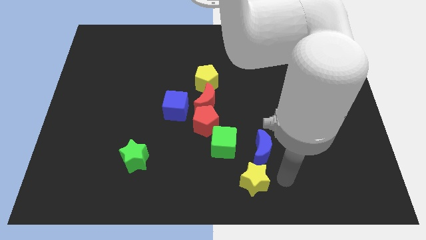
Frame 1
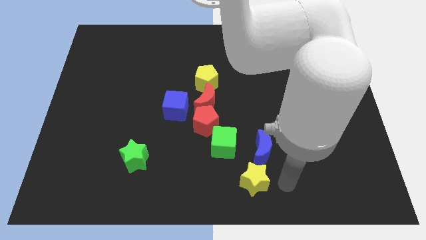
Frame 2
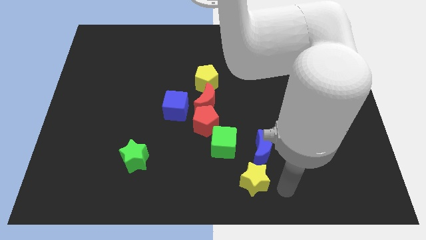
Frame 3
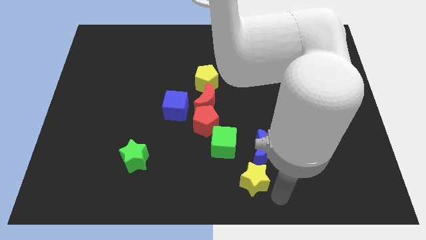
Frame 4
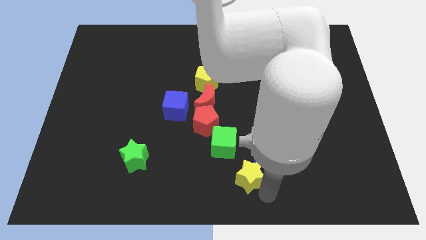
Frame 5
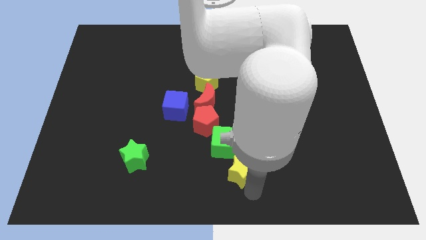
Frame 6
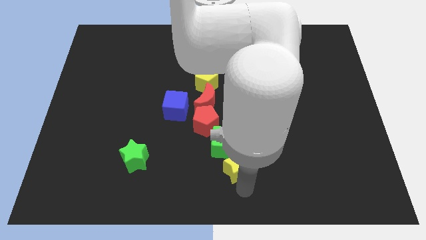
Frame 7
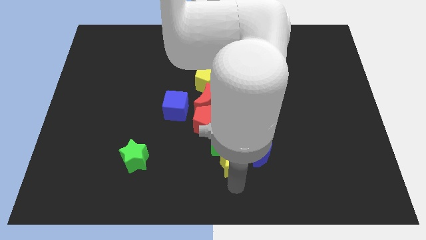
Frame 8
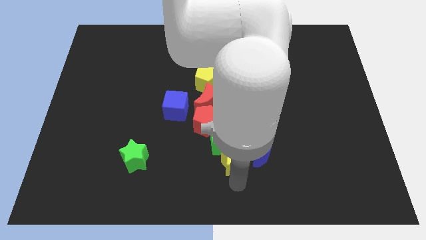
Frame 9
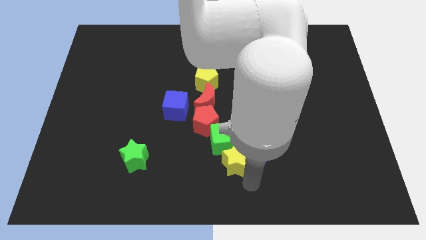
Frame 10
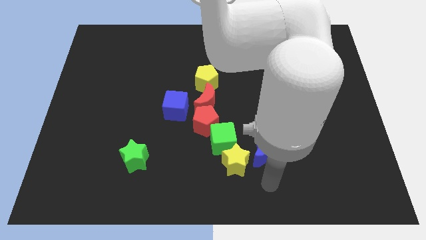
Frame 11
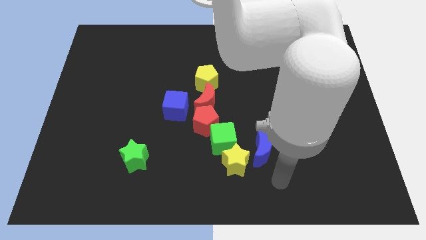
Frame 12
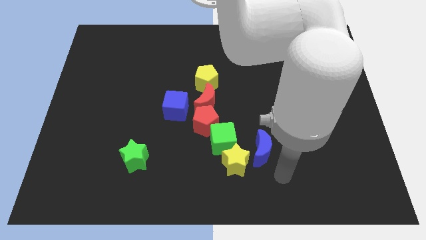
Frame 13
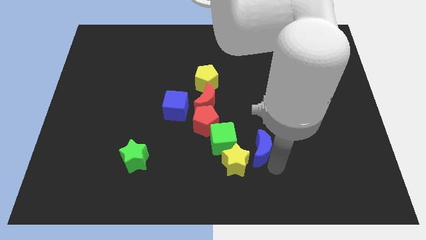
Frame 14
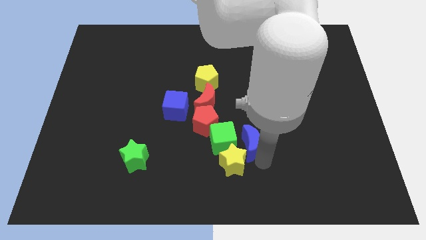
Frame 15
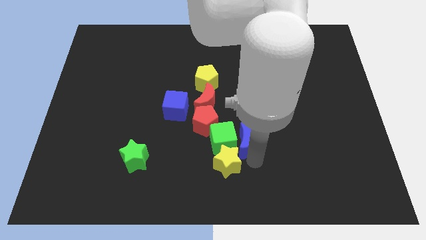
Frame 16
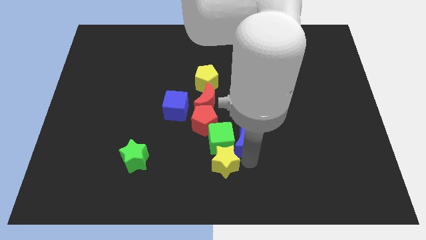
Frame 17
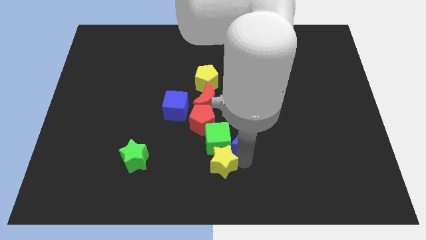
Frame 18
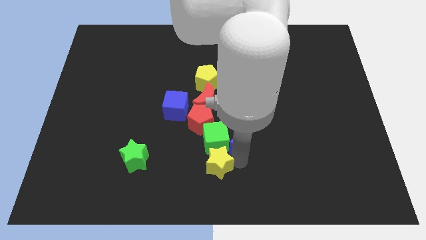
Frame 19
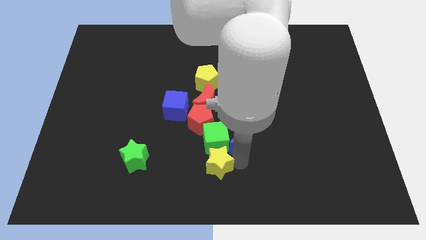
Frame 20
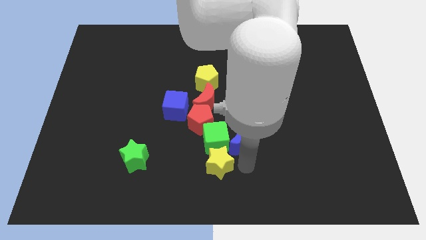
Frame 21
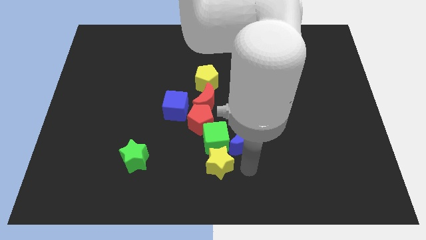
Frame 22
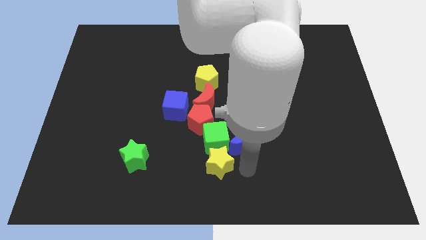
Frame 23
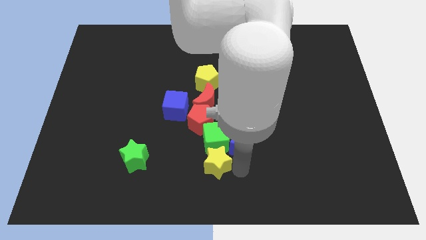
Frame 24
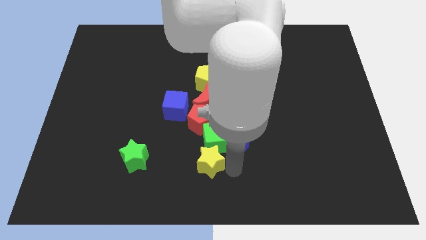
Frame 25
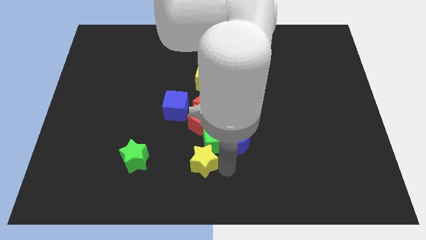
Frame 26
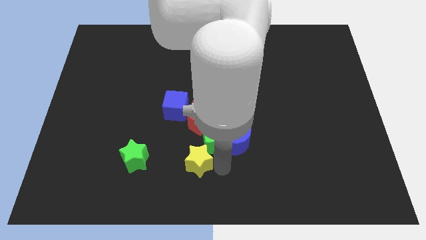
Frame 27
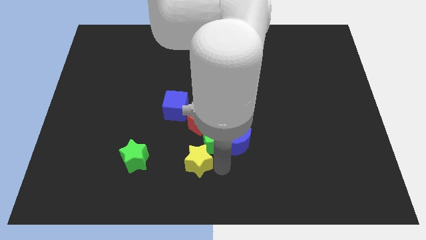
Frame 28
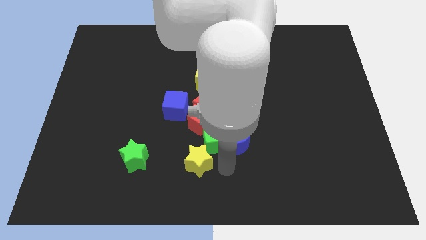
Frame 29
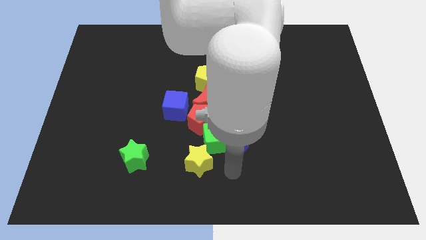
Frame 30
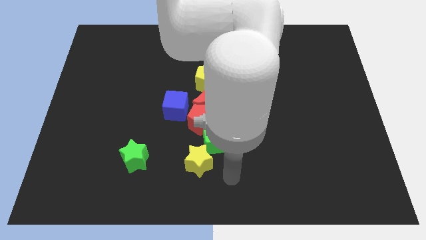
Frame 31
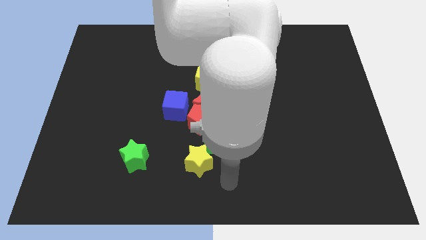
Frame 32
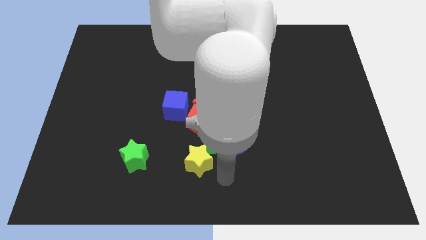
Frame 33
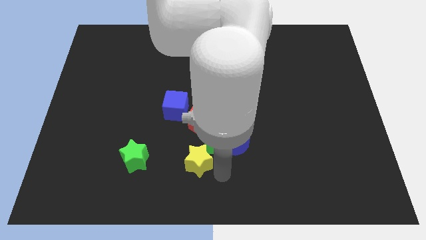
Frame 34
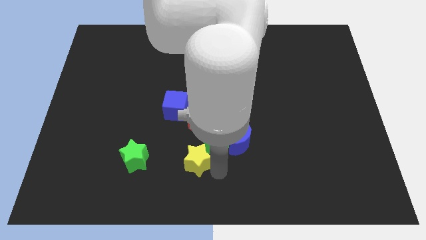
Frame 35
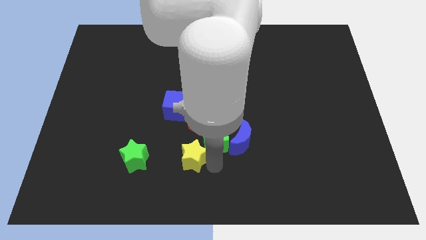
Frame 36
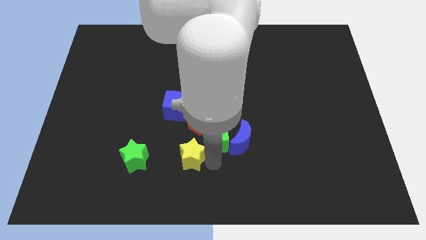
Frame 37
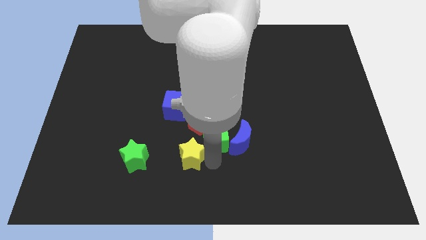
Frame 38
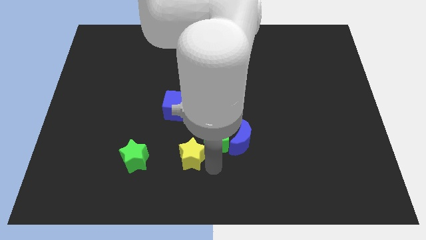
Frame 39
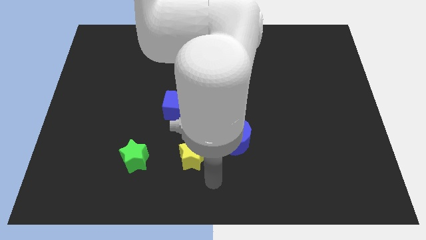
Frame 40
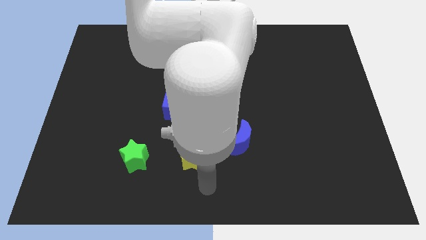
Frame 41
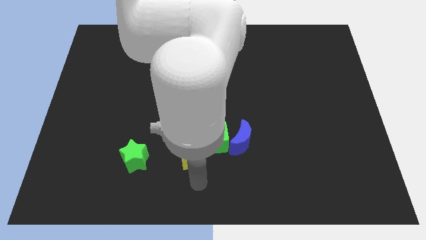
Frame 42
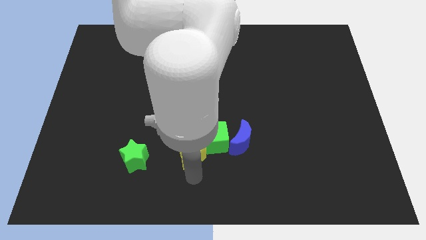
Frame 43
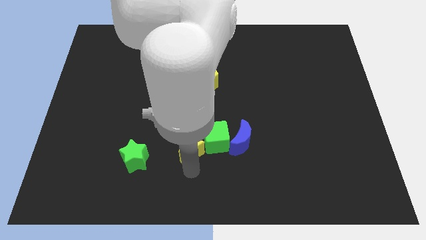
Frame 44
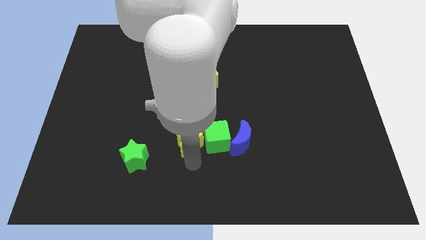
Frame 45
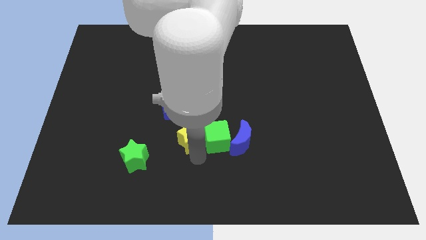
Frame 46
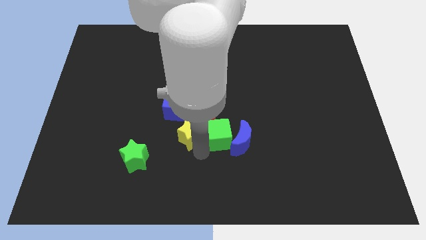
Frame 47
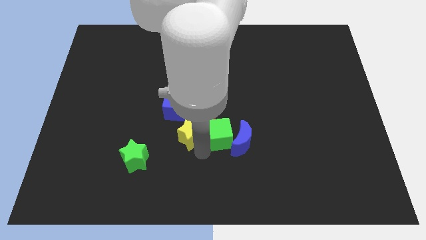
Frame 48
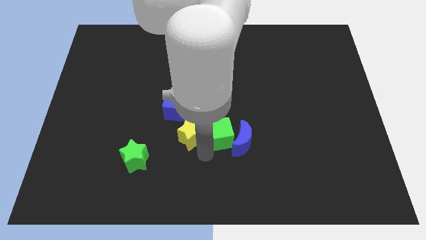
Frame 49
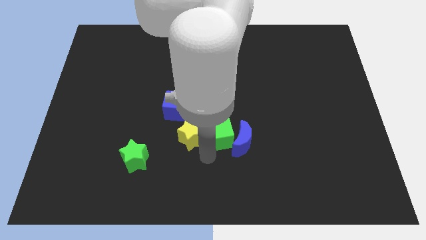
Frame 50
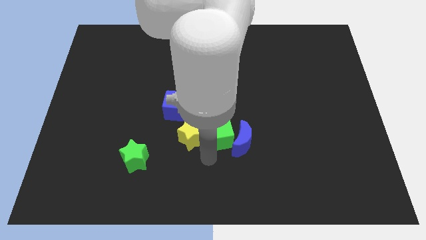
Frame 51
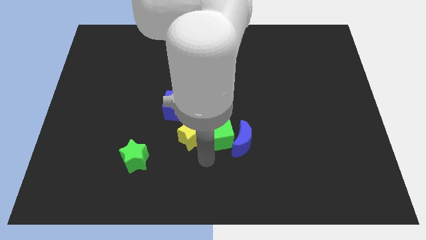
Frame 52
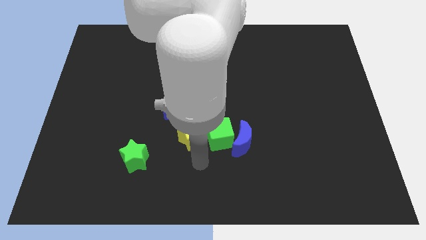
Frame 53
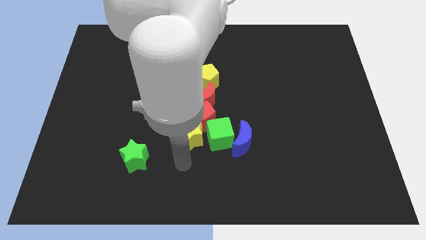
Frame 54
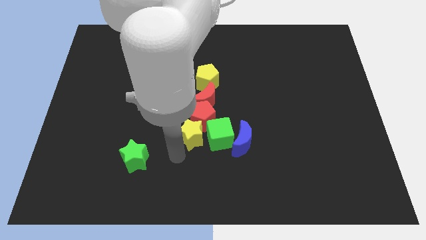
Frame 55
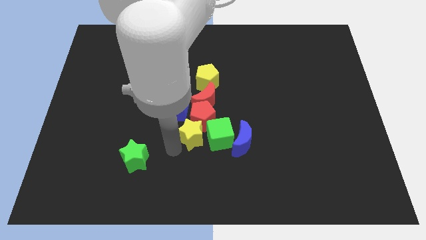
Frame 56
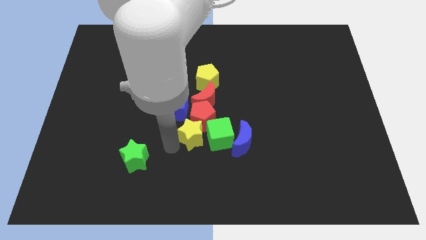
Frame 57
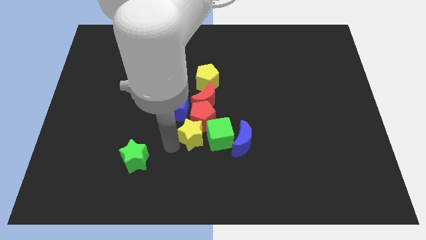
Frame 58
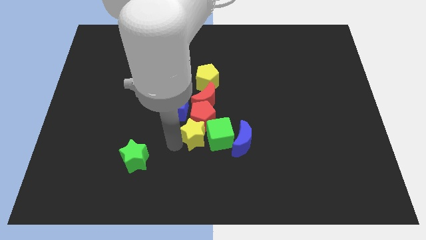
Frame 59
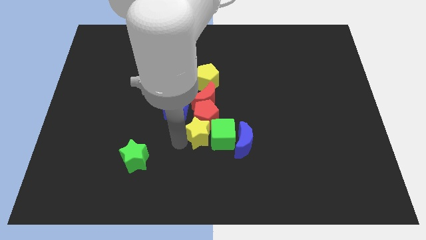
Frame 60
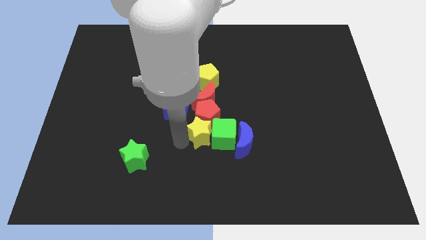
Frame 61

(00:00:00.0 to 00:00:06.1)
push yellow star into the group of blocks

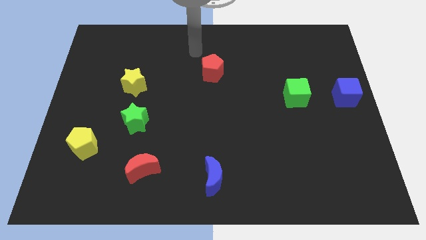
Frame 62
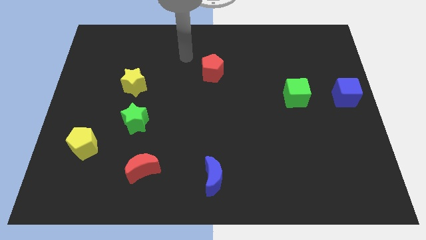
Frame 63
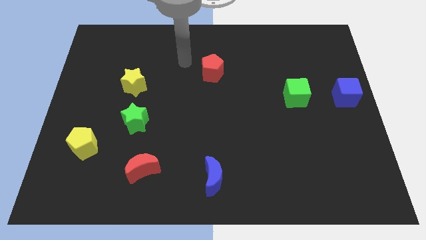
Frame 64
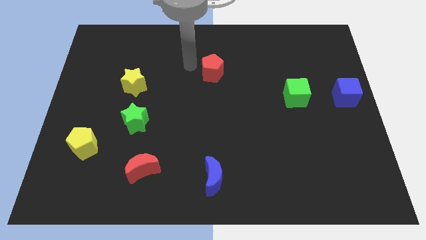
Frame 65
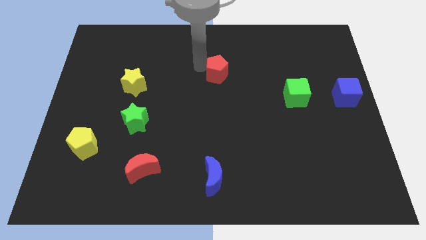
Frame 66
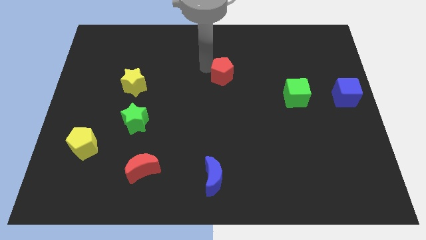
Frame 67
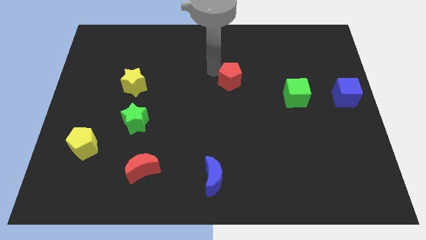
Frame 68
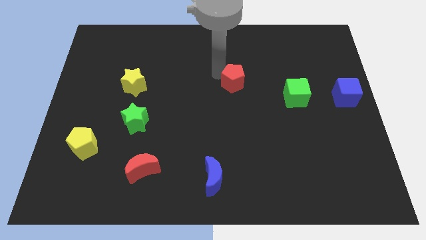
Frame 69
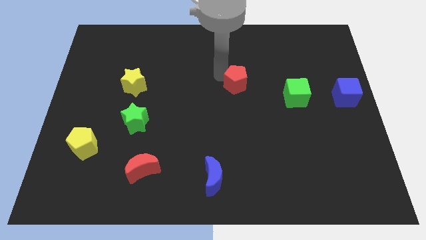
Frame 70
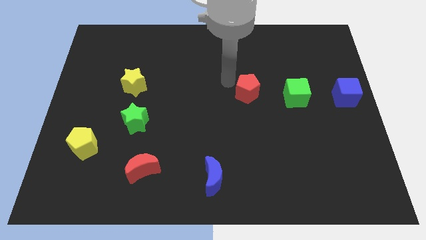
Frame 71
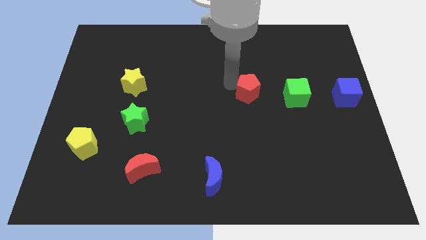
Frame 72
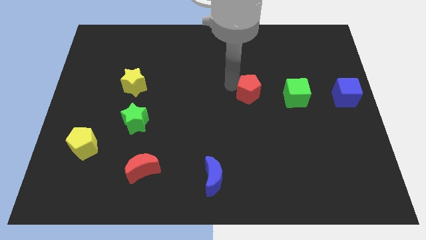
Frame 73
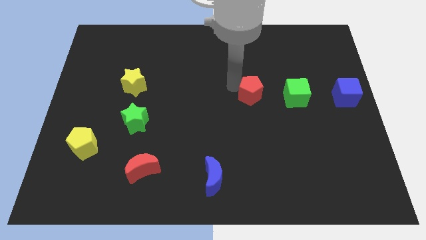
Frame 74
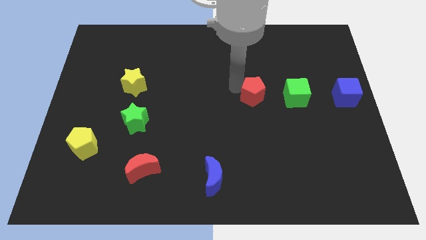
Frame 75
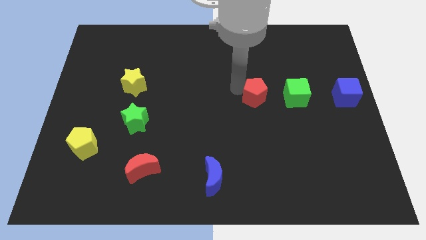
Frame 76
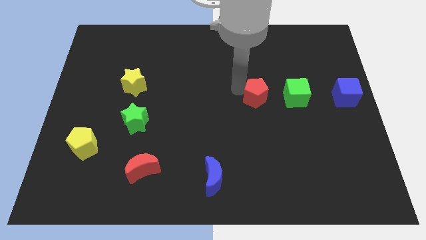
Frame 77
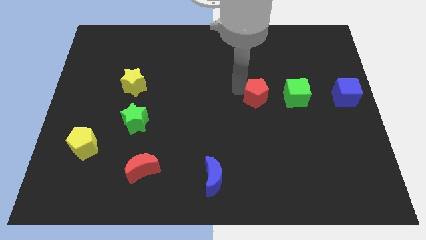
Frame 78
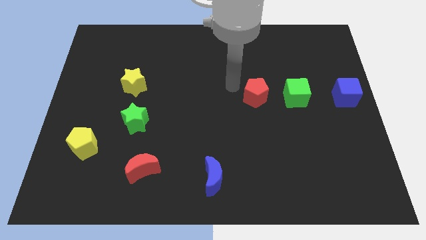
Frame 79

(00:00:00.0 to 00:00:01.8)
move the red pentagon left to the green cube

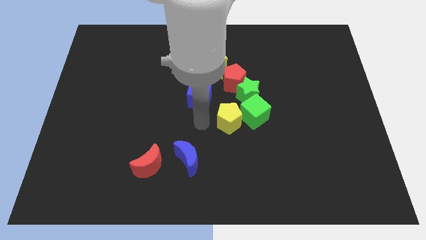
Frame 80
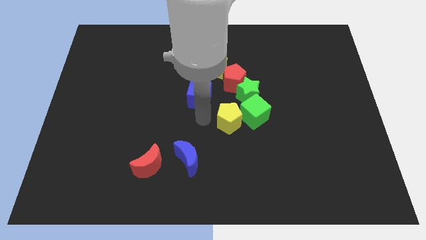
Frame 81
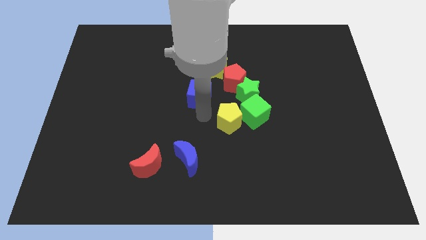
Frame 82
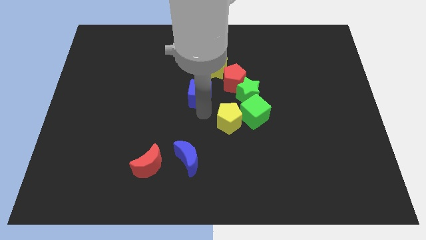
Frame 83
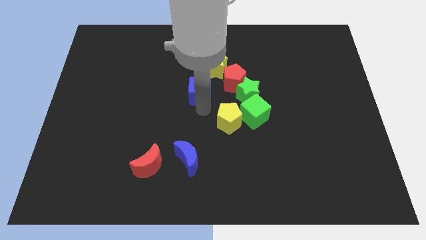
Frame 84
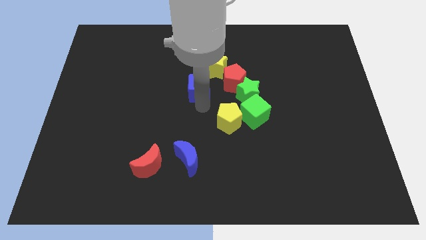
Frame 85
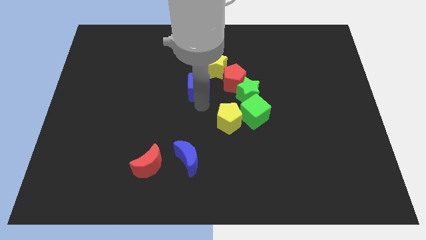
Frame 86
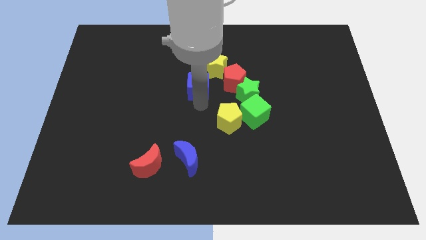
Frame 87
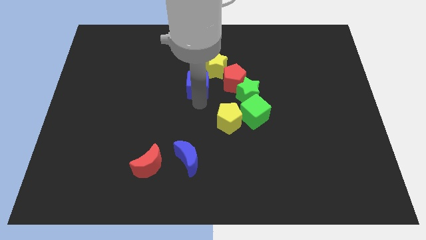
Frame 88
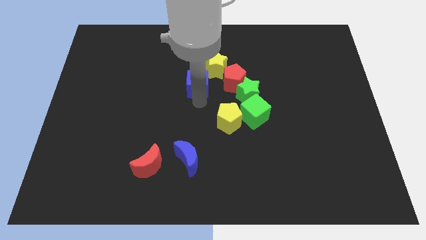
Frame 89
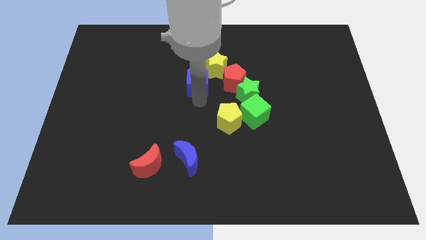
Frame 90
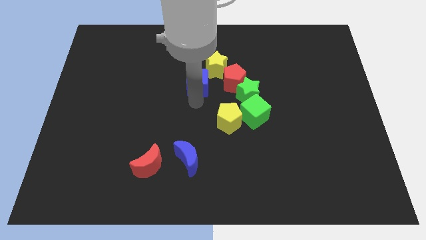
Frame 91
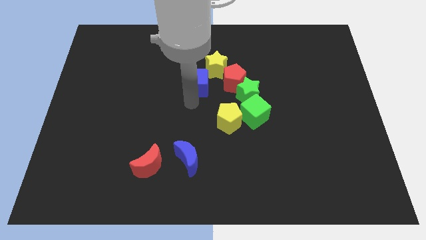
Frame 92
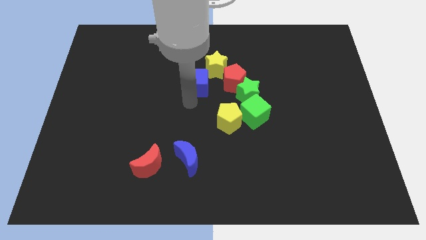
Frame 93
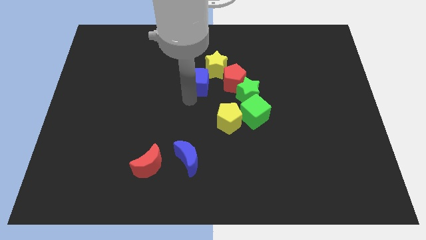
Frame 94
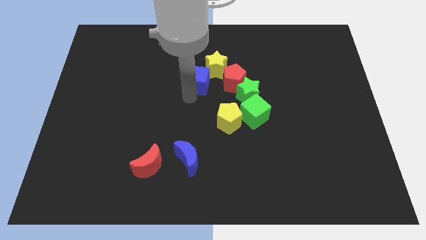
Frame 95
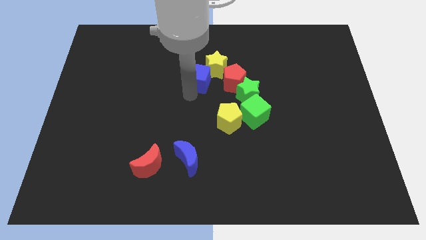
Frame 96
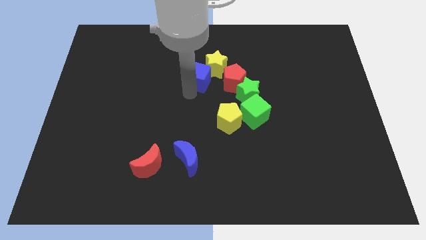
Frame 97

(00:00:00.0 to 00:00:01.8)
place the blue cube horizontally to the left side of the red pentagon
